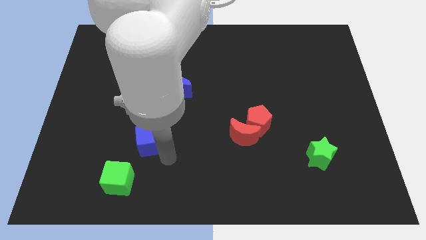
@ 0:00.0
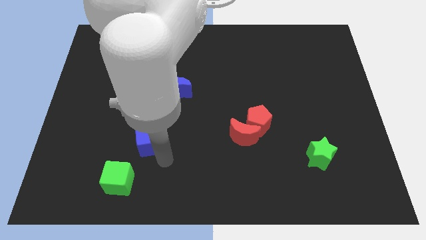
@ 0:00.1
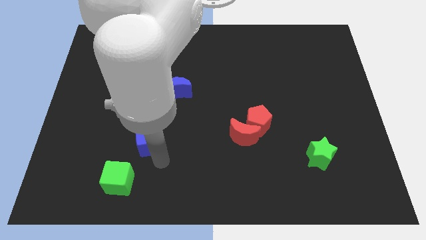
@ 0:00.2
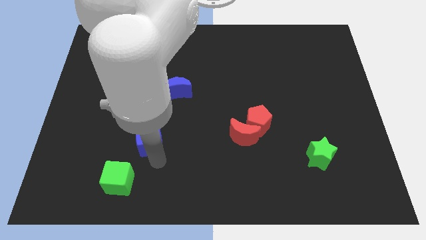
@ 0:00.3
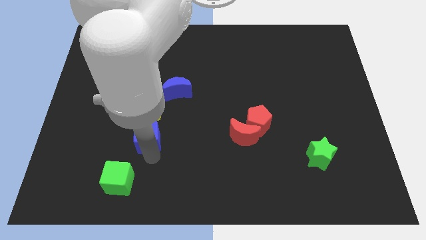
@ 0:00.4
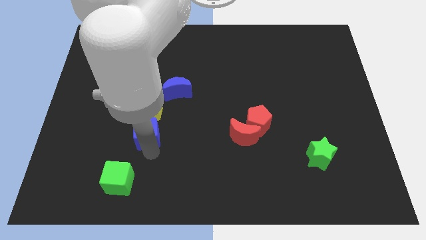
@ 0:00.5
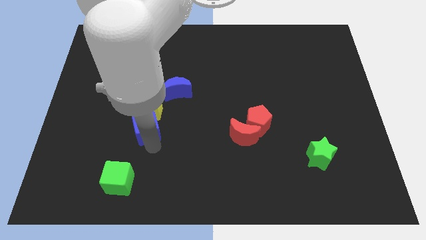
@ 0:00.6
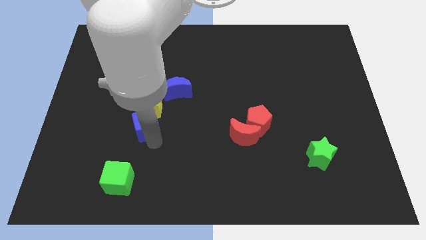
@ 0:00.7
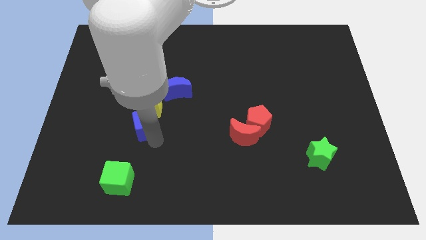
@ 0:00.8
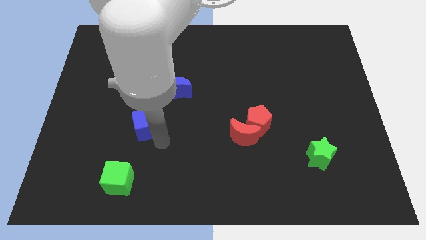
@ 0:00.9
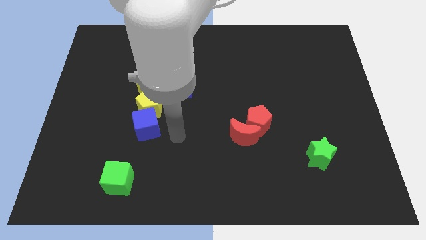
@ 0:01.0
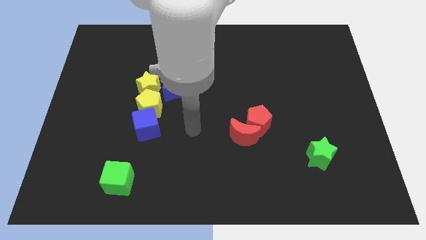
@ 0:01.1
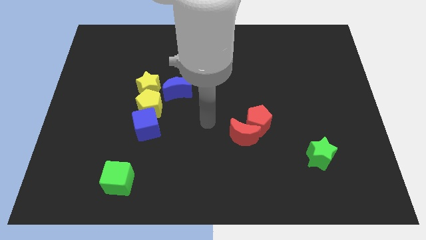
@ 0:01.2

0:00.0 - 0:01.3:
place blue cube at the bottom side of the yellow pentagon

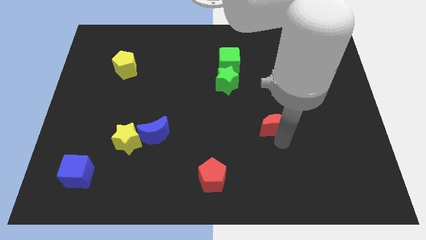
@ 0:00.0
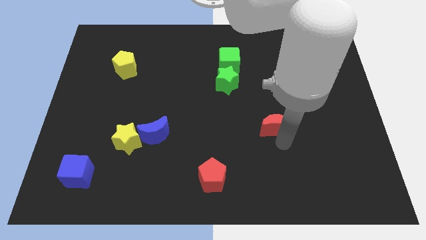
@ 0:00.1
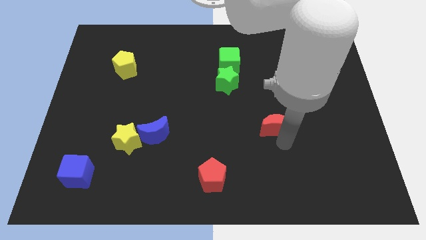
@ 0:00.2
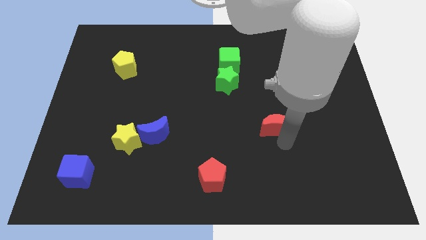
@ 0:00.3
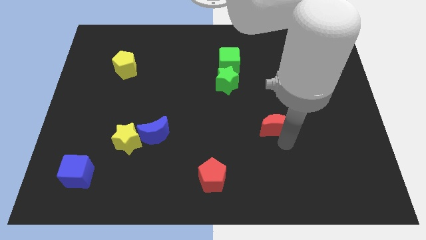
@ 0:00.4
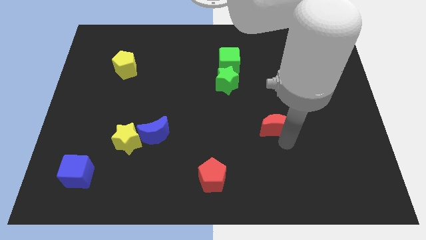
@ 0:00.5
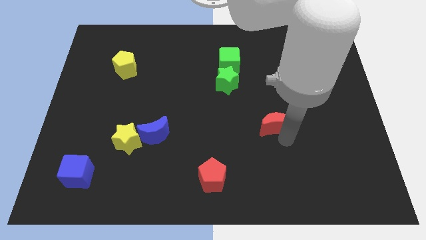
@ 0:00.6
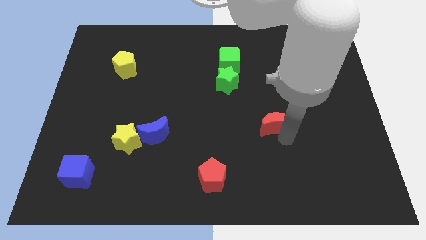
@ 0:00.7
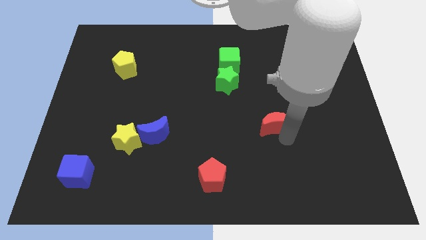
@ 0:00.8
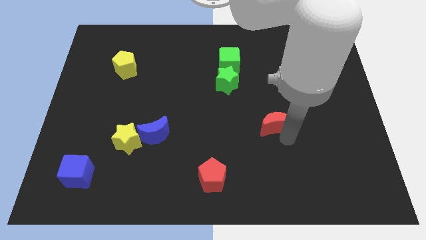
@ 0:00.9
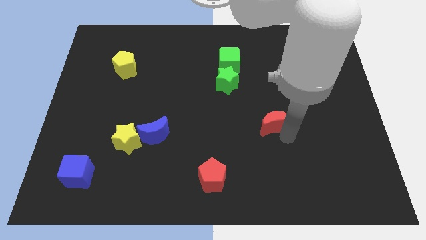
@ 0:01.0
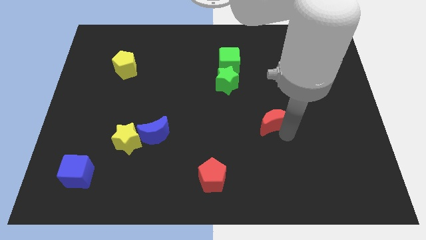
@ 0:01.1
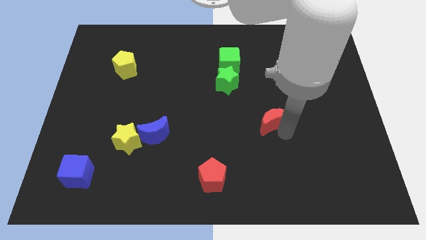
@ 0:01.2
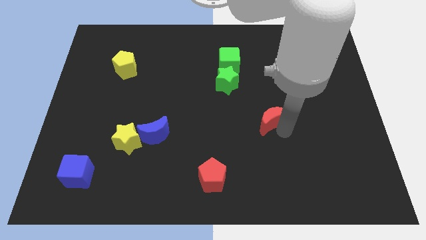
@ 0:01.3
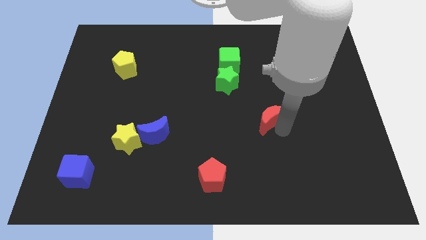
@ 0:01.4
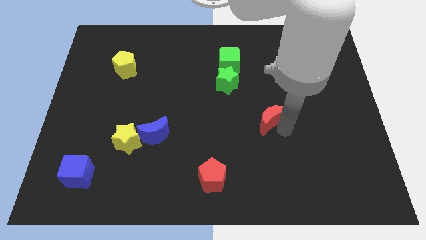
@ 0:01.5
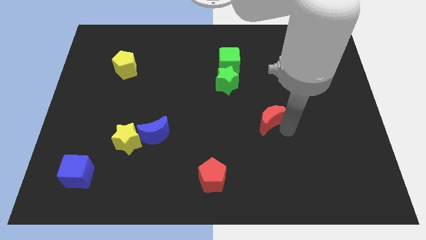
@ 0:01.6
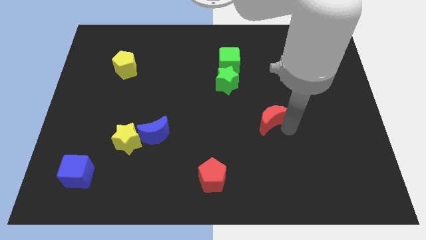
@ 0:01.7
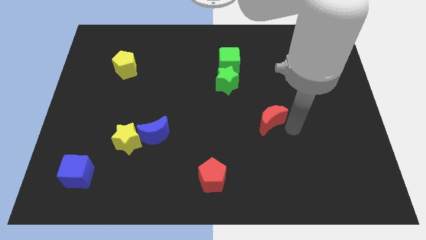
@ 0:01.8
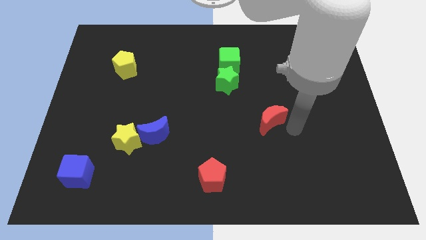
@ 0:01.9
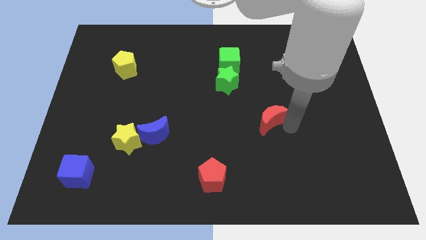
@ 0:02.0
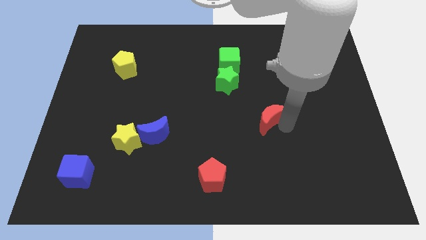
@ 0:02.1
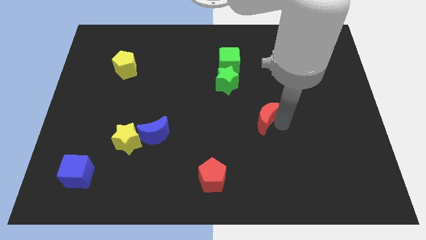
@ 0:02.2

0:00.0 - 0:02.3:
move the red moon diagonally on the bottom right side of the green star

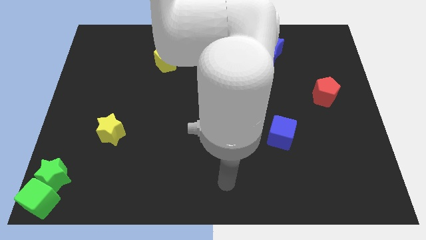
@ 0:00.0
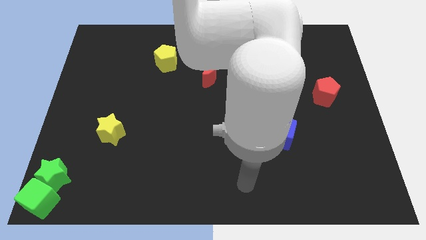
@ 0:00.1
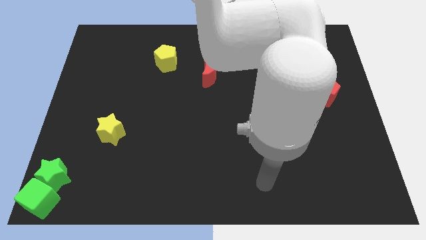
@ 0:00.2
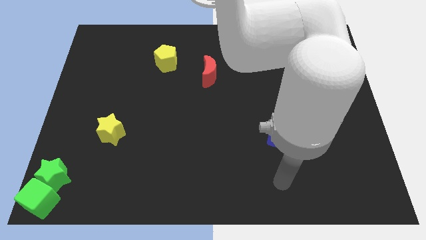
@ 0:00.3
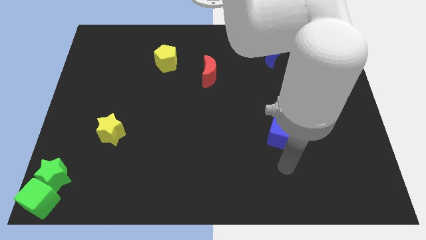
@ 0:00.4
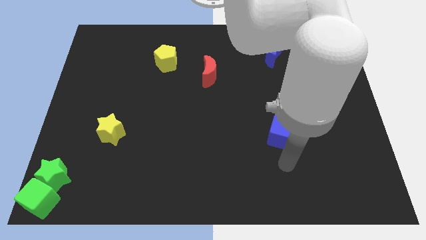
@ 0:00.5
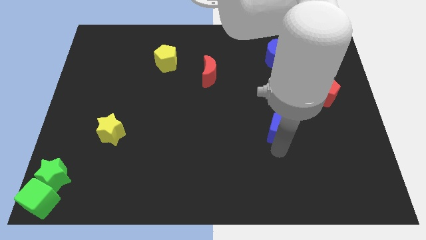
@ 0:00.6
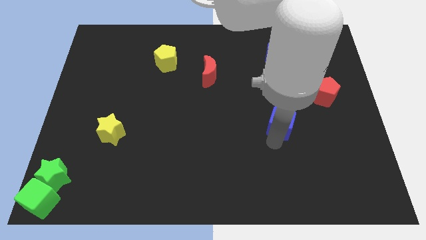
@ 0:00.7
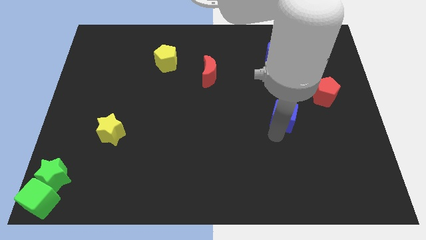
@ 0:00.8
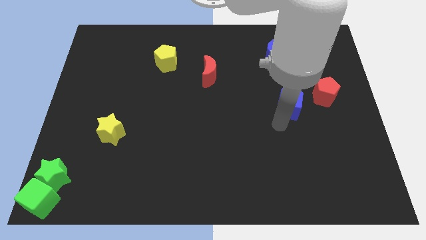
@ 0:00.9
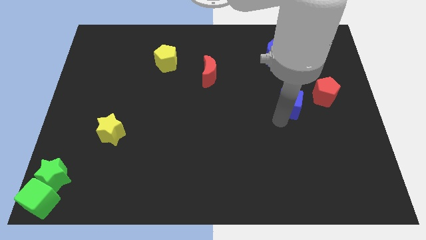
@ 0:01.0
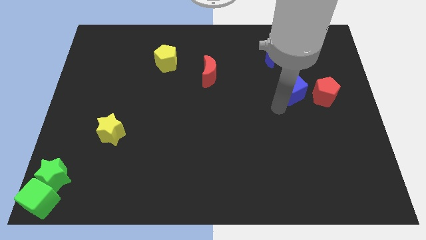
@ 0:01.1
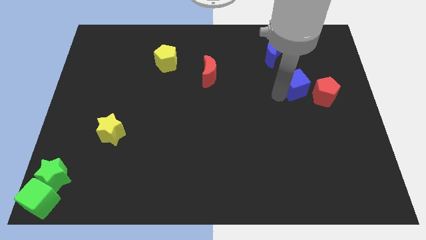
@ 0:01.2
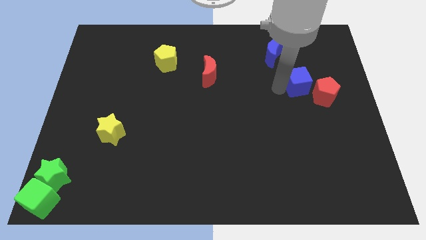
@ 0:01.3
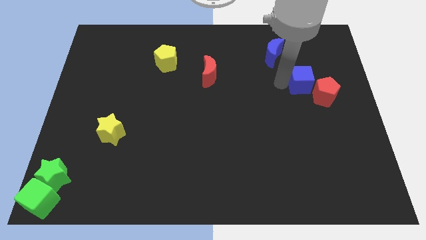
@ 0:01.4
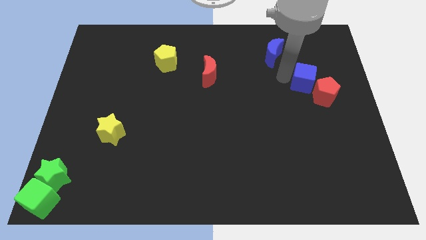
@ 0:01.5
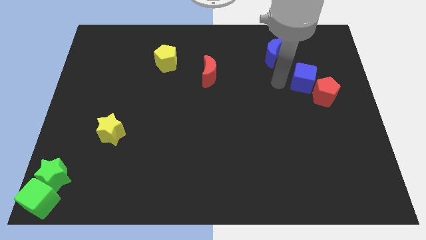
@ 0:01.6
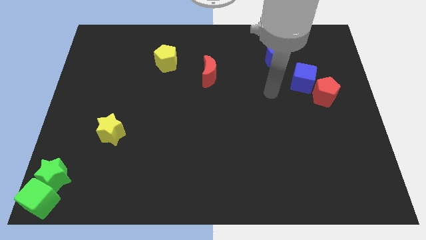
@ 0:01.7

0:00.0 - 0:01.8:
place the blue cube in between blue moon and red pentagon

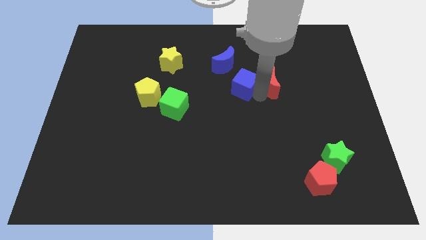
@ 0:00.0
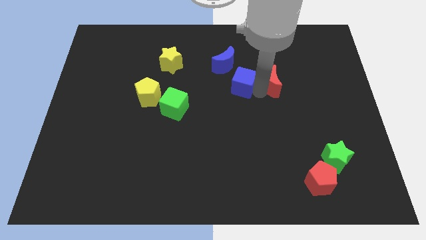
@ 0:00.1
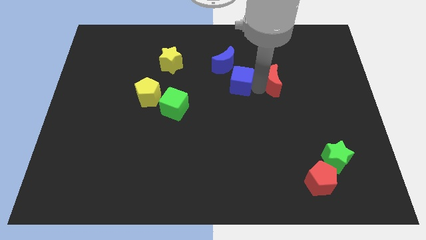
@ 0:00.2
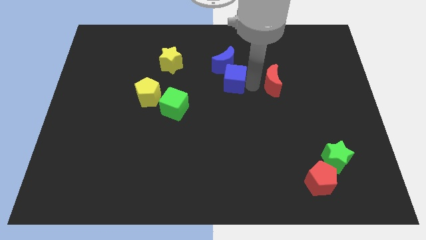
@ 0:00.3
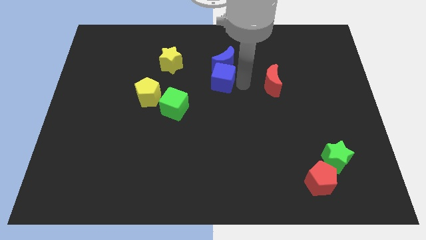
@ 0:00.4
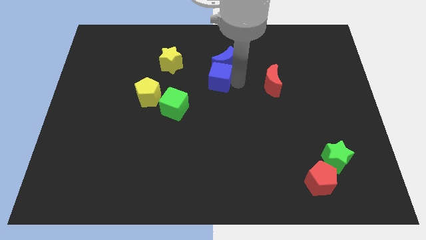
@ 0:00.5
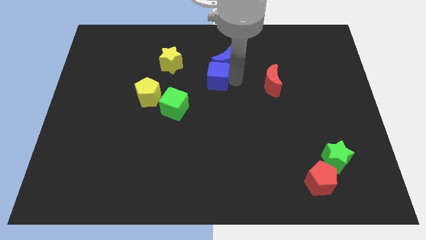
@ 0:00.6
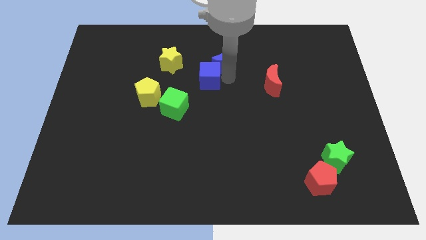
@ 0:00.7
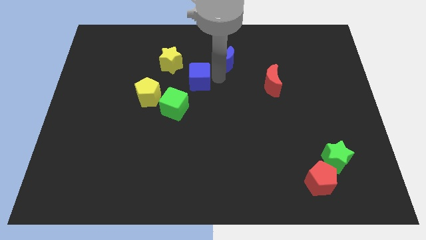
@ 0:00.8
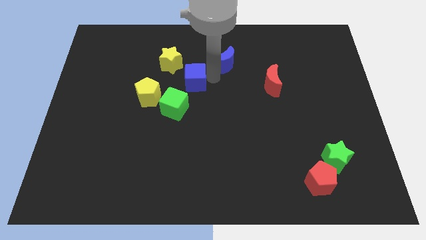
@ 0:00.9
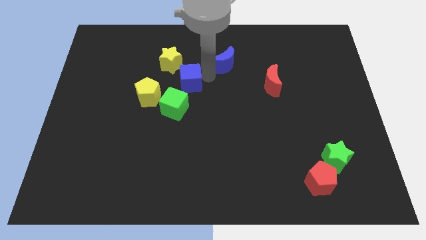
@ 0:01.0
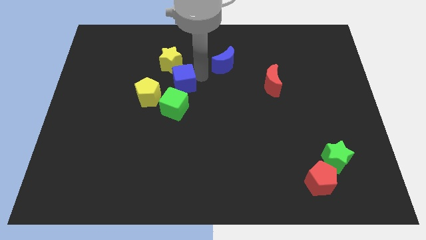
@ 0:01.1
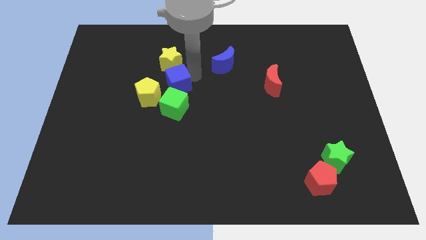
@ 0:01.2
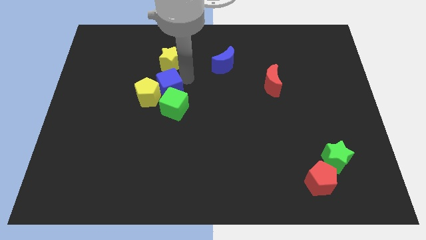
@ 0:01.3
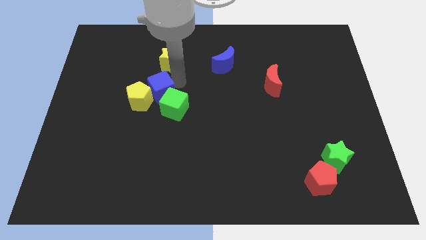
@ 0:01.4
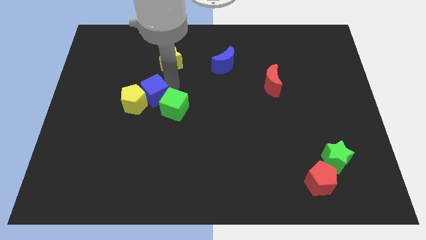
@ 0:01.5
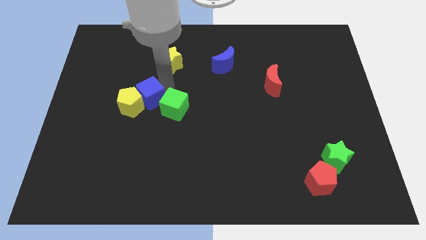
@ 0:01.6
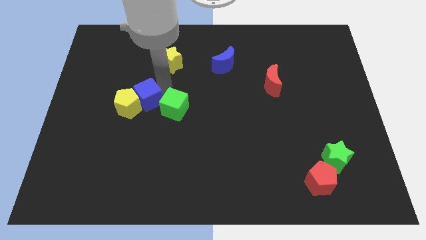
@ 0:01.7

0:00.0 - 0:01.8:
slide the blue cube into the yellow pentagon

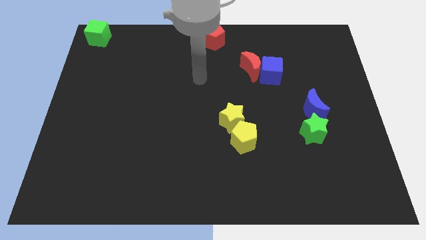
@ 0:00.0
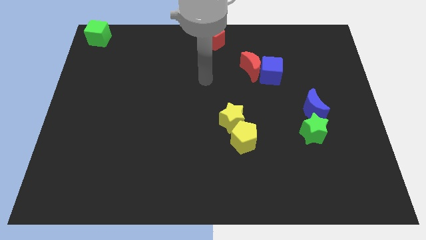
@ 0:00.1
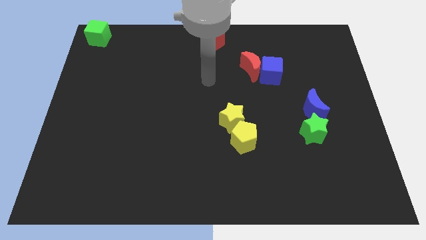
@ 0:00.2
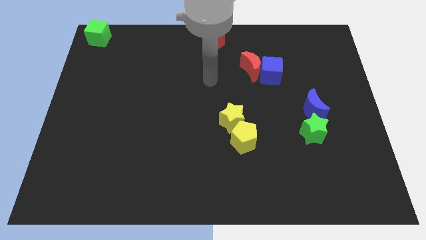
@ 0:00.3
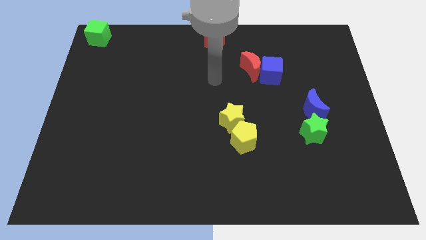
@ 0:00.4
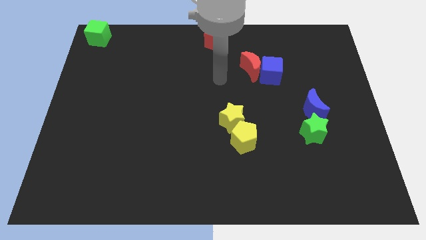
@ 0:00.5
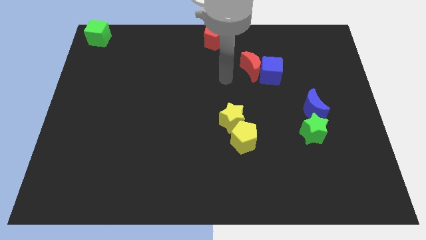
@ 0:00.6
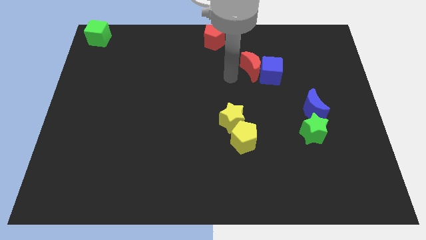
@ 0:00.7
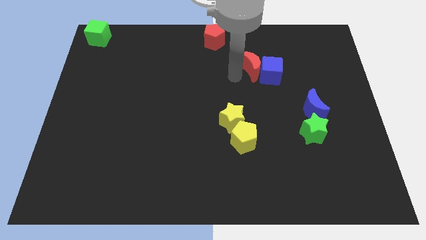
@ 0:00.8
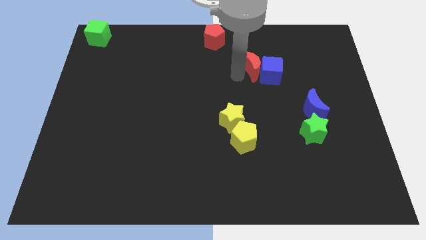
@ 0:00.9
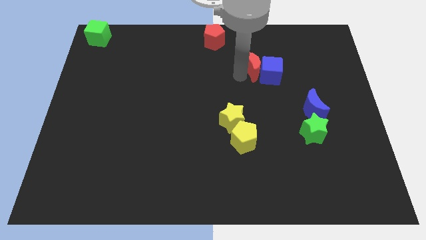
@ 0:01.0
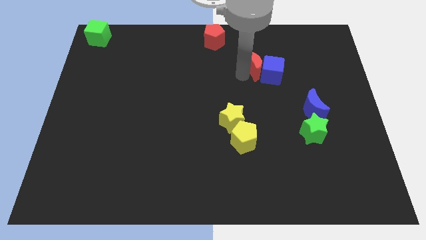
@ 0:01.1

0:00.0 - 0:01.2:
move arm near red moon

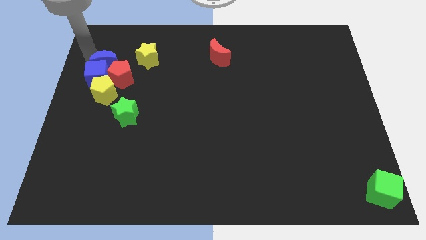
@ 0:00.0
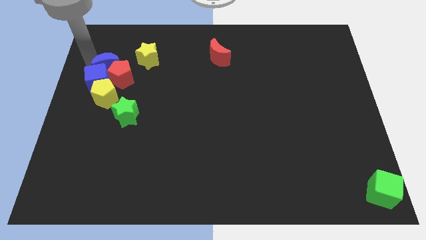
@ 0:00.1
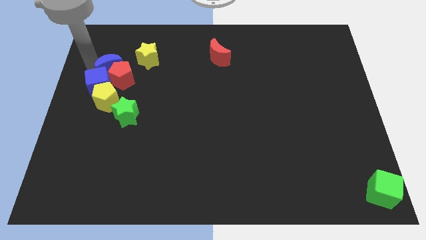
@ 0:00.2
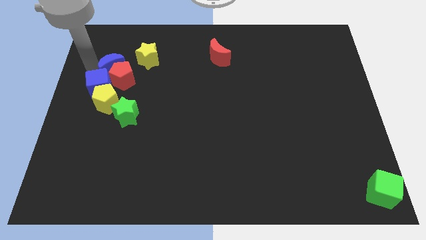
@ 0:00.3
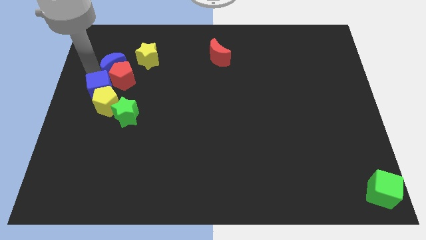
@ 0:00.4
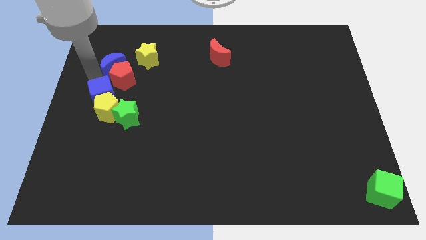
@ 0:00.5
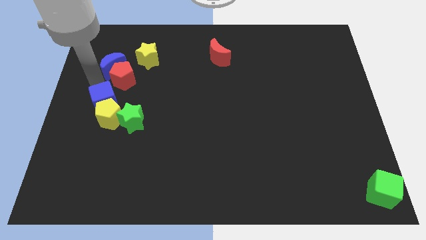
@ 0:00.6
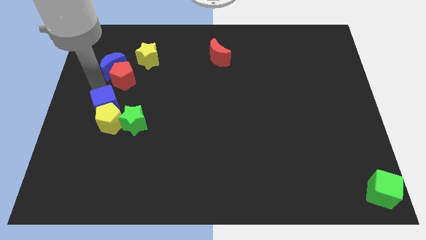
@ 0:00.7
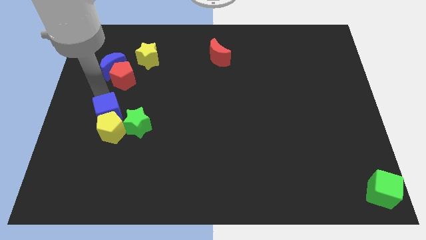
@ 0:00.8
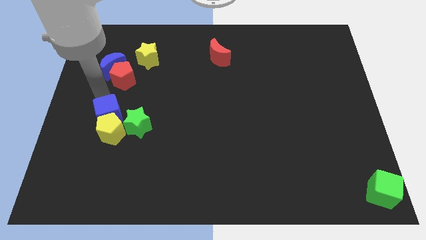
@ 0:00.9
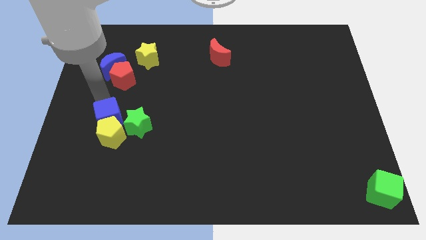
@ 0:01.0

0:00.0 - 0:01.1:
separate the blue moon and the blue cube
